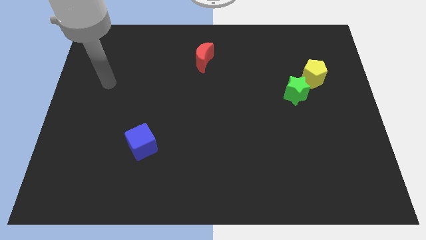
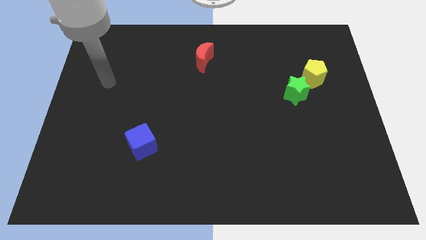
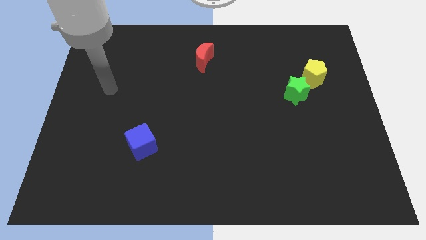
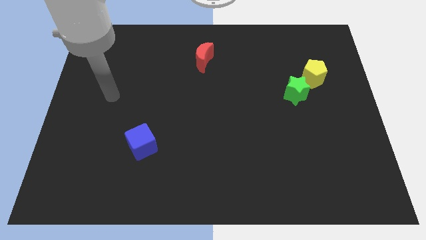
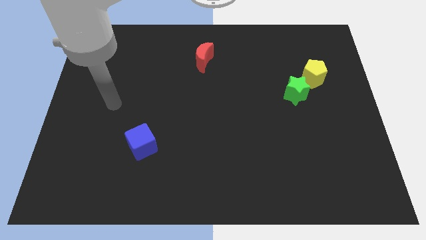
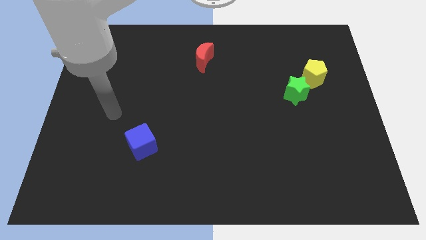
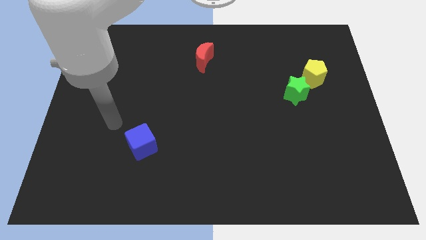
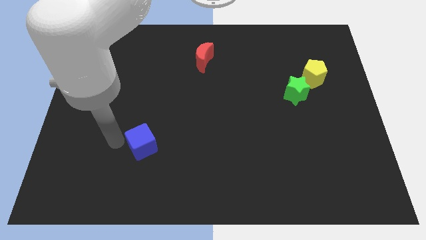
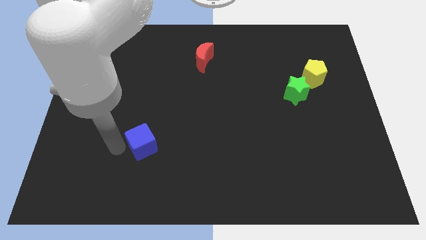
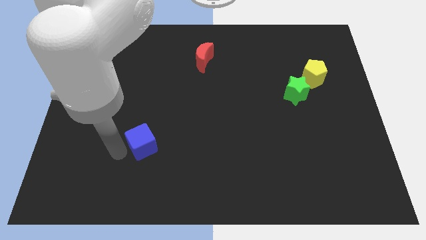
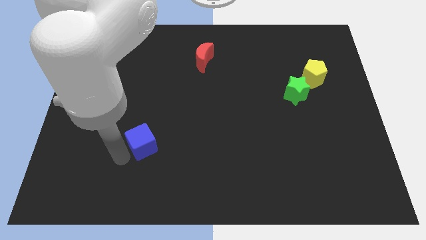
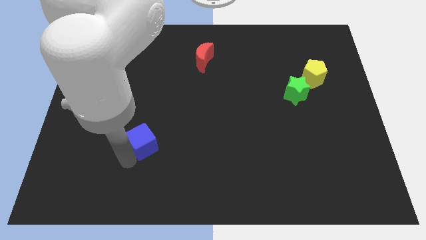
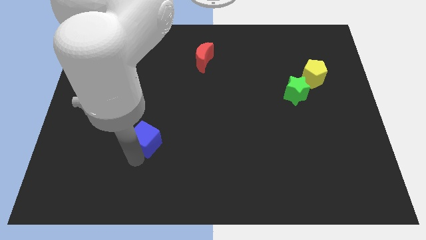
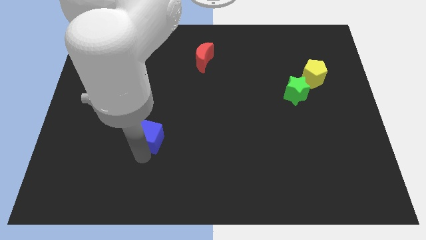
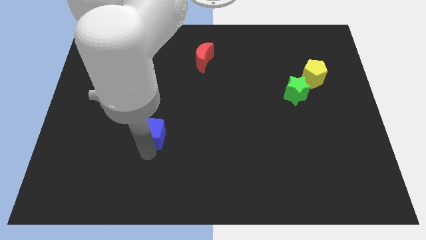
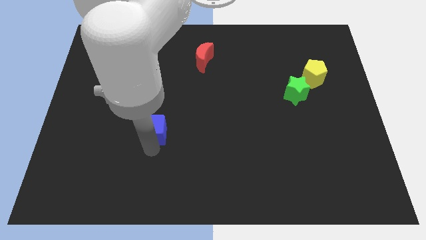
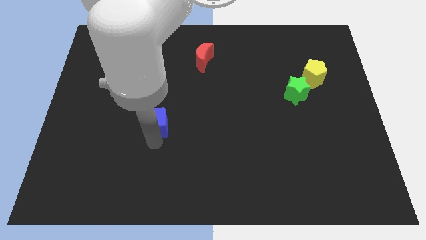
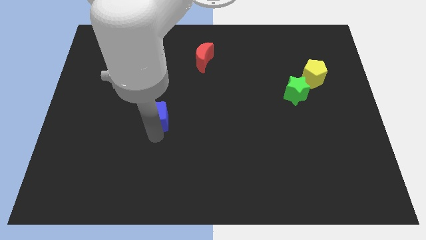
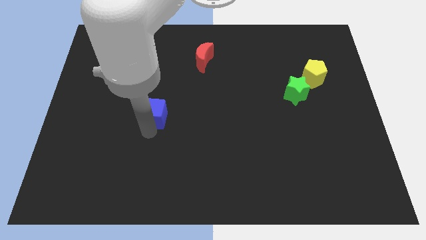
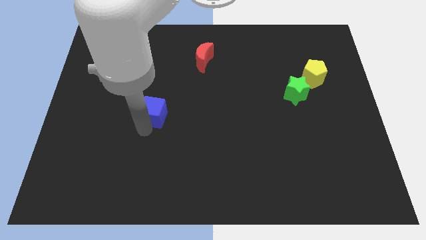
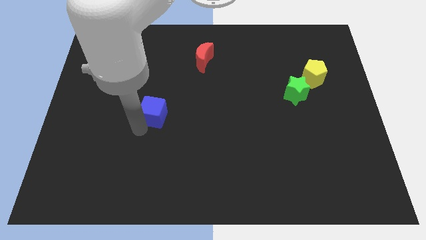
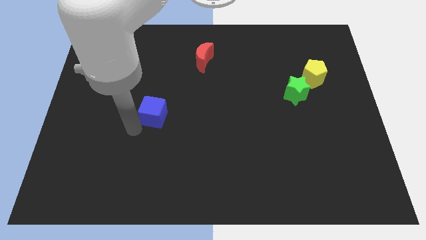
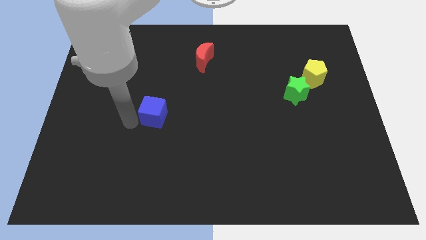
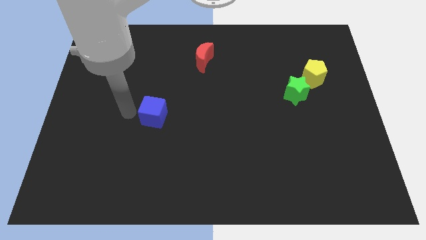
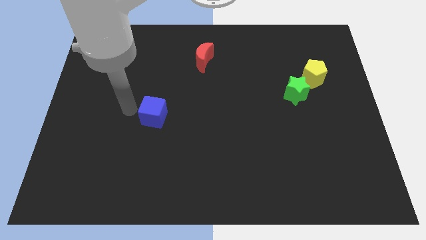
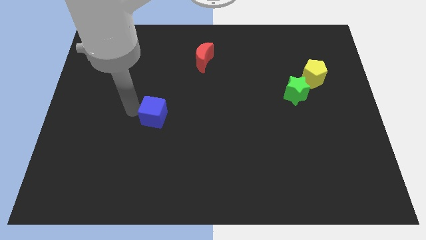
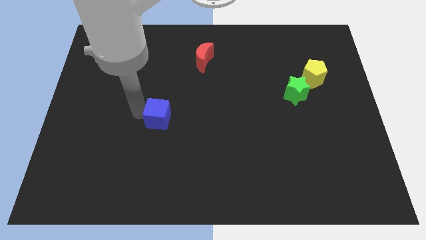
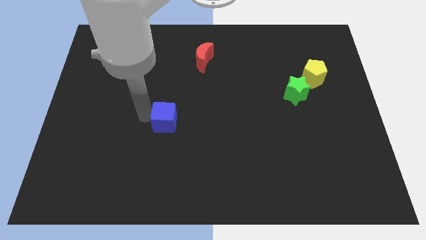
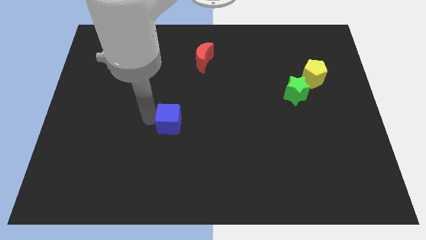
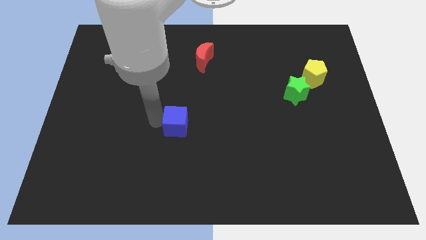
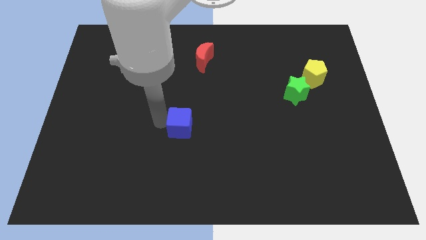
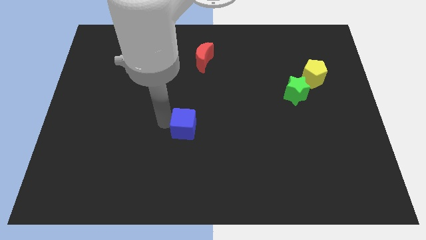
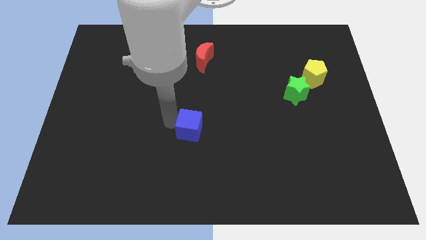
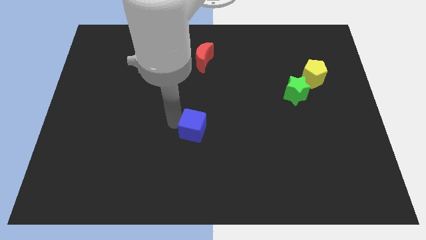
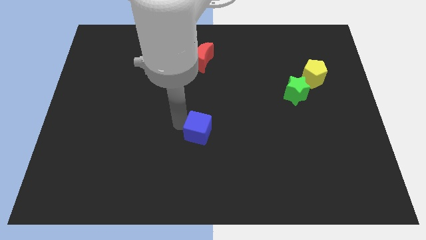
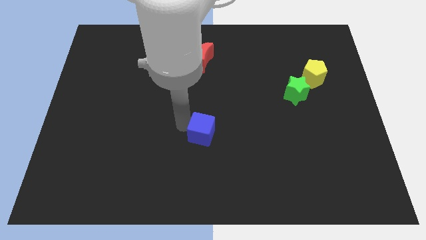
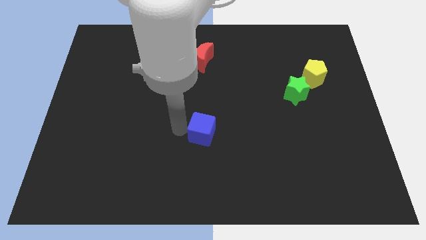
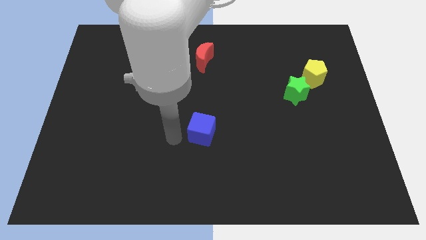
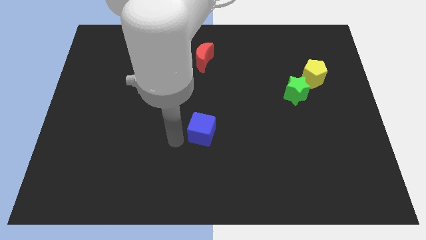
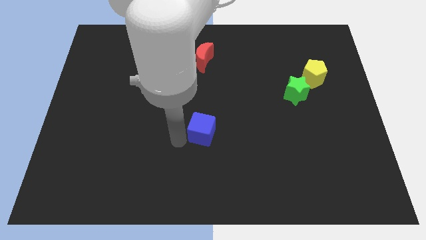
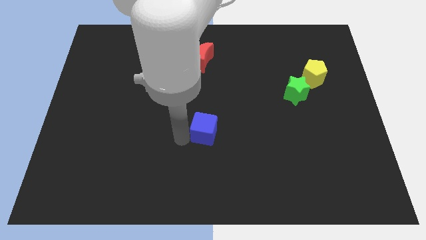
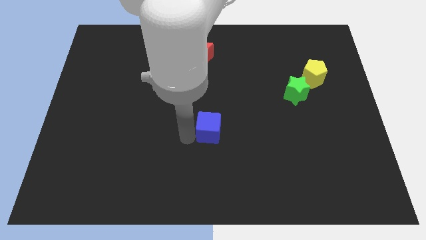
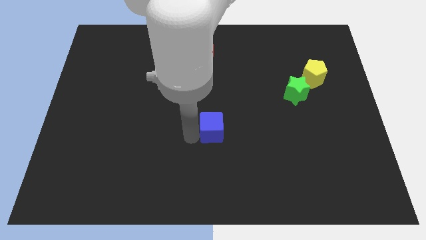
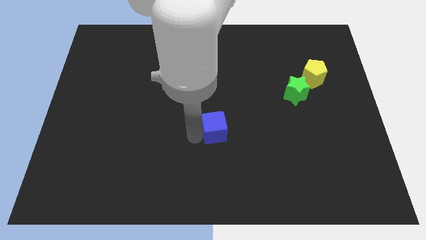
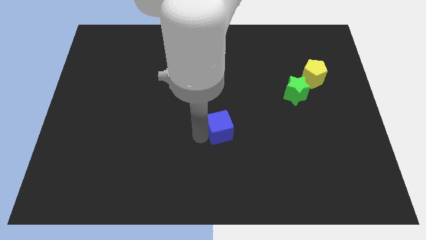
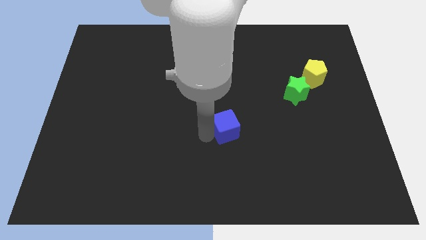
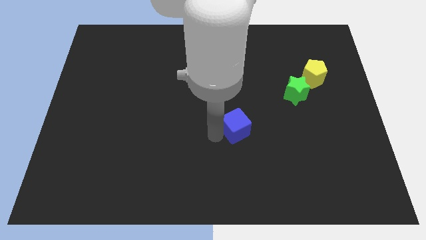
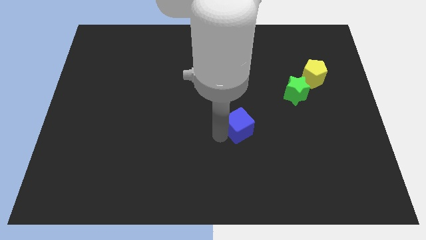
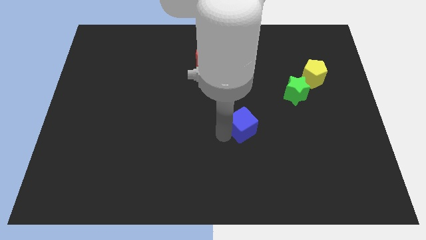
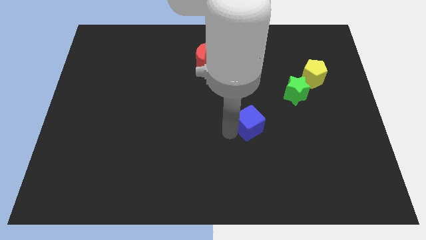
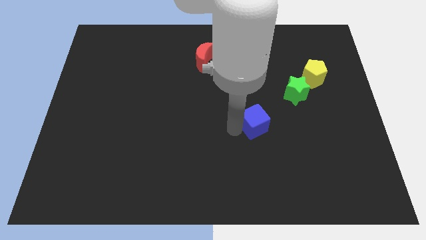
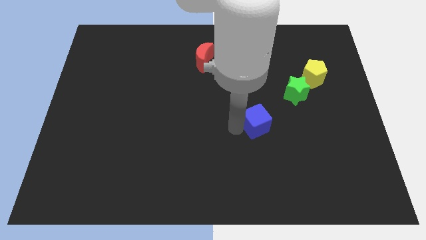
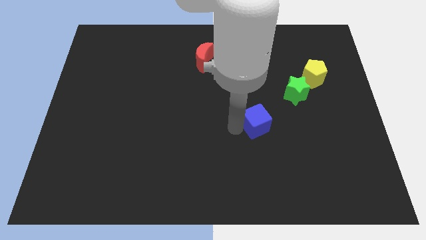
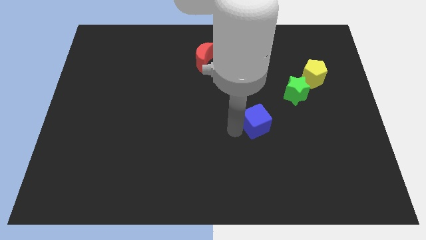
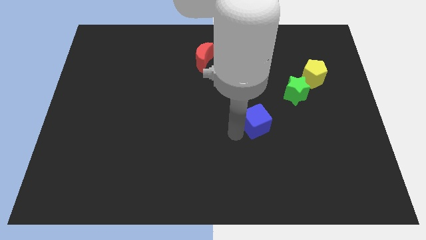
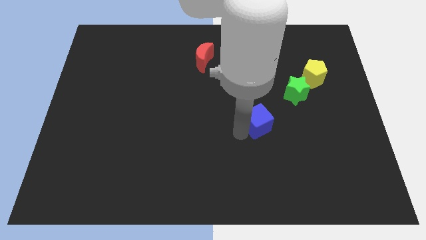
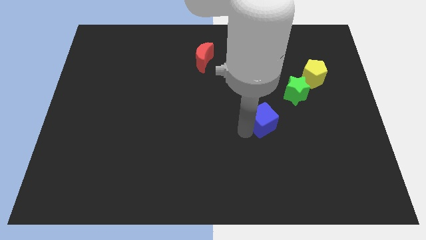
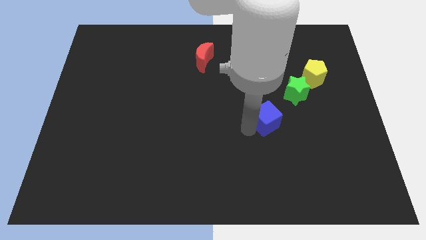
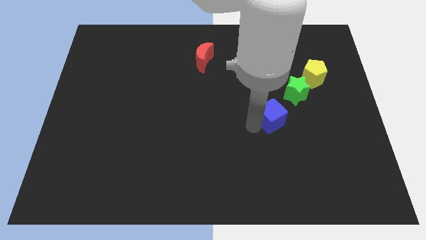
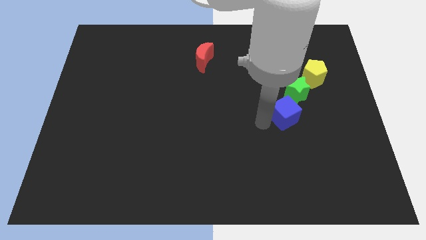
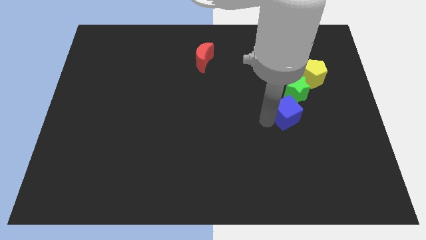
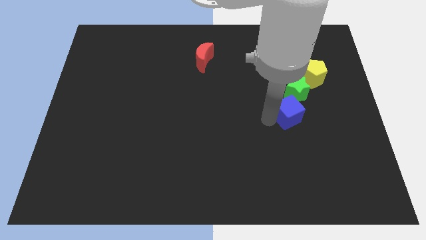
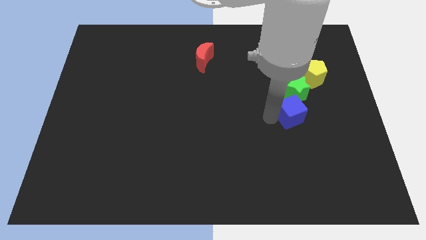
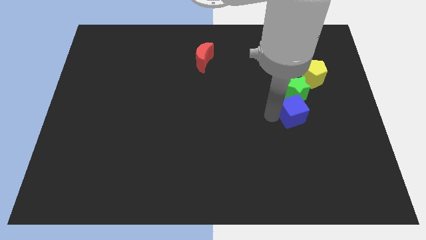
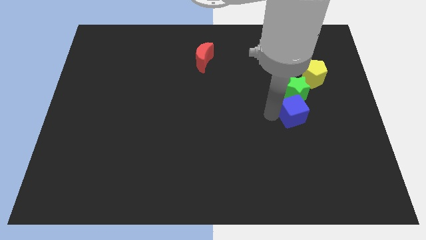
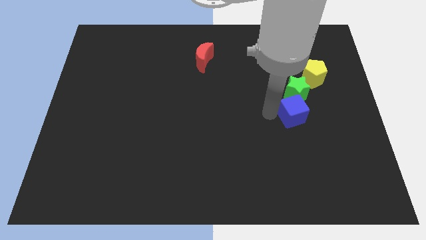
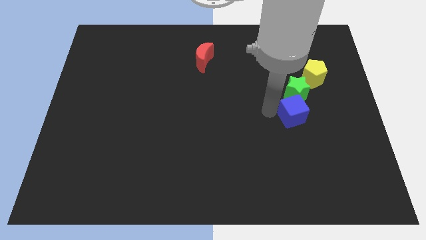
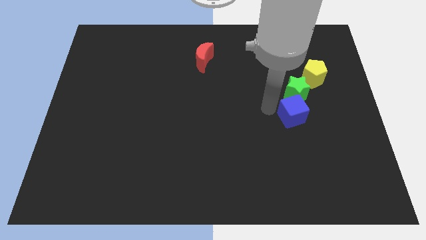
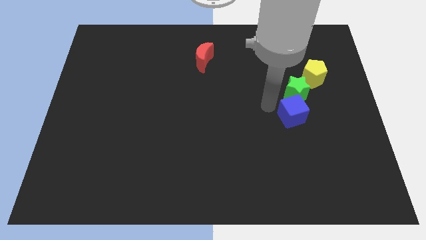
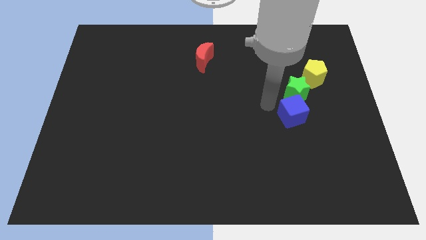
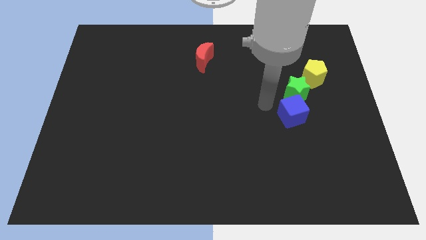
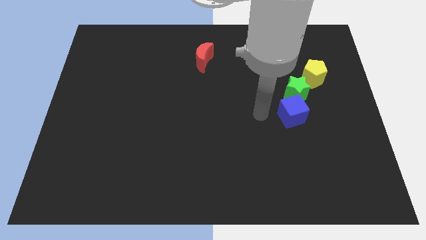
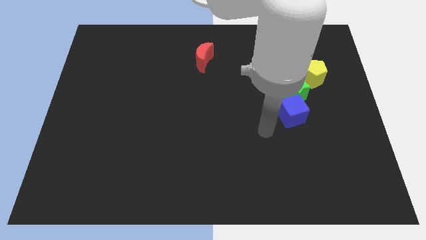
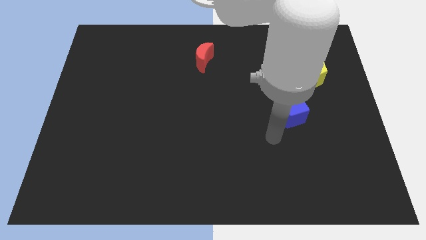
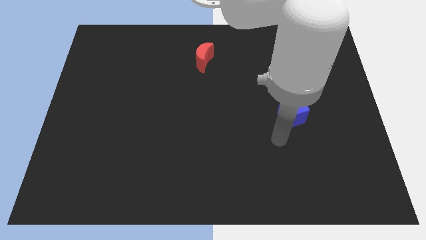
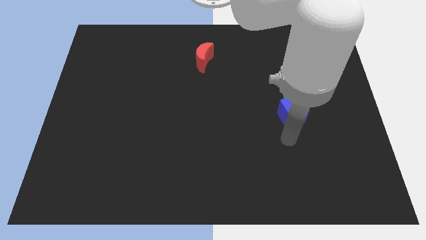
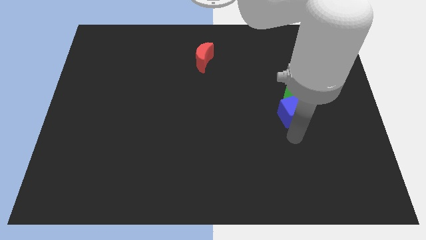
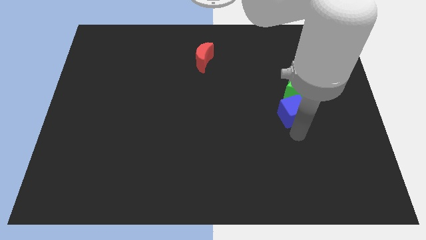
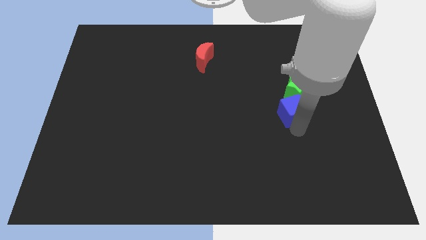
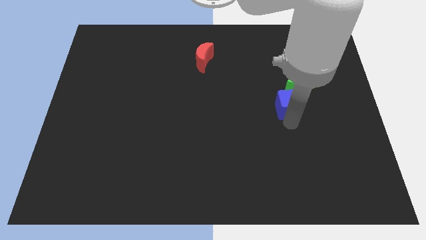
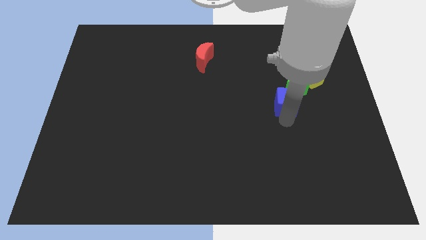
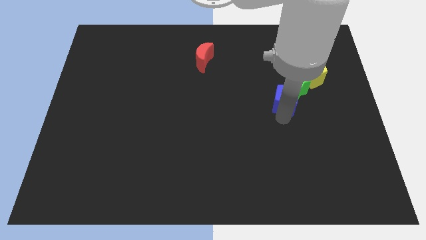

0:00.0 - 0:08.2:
push the blue block close to the green block

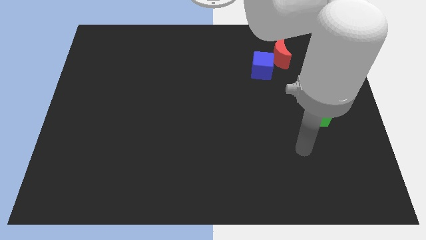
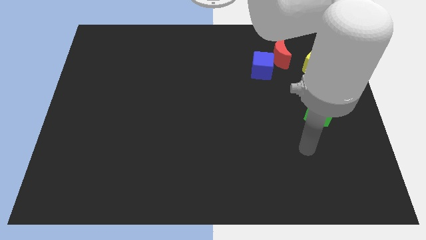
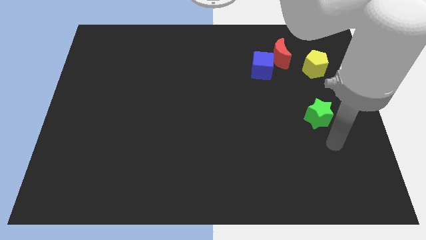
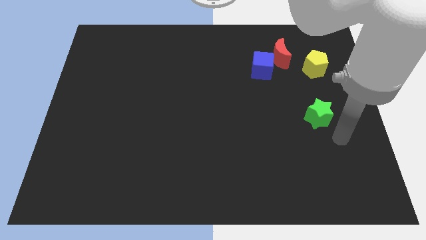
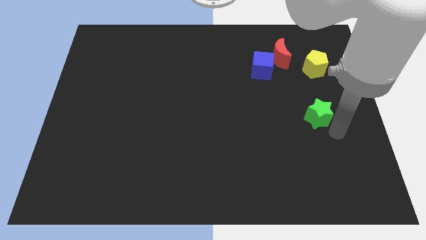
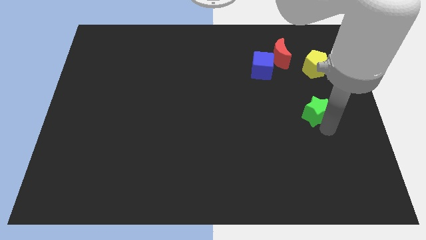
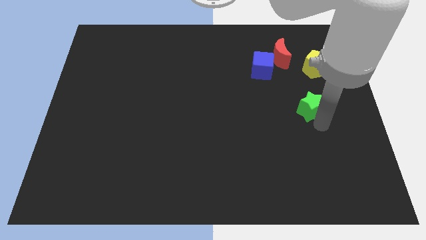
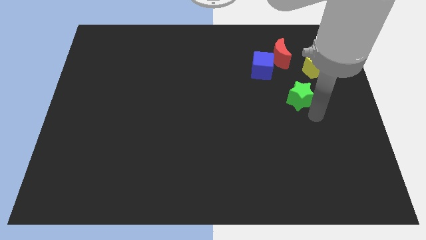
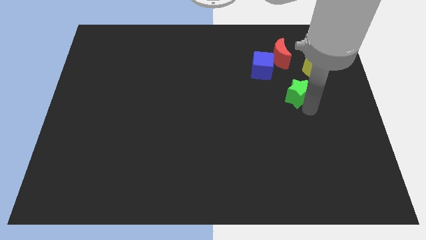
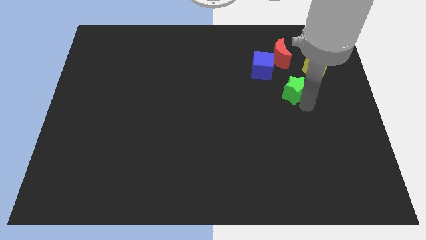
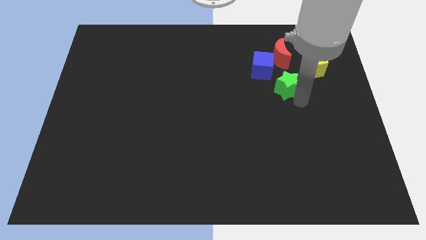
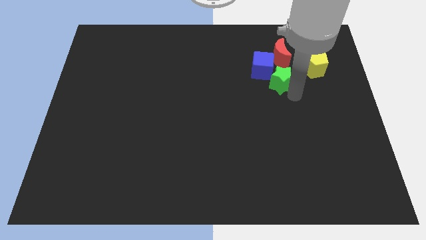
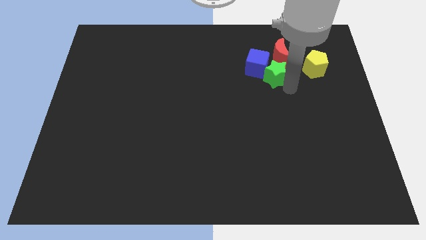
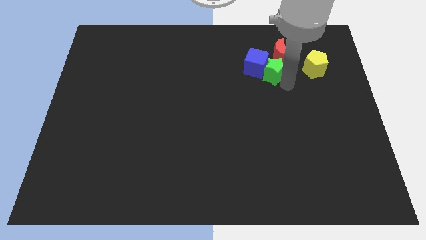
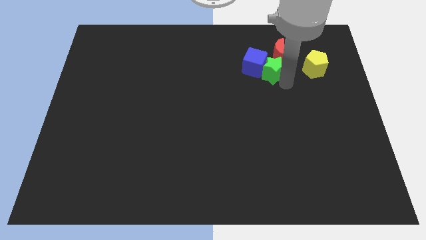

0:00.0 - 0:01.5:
slide the green block towards the red moon
